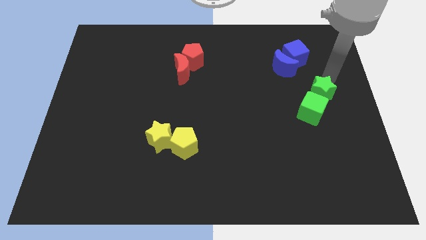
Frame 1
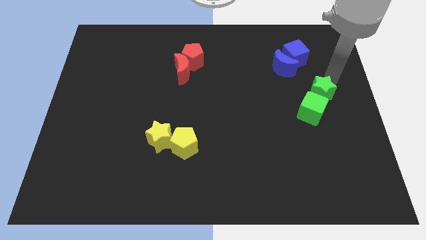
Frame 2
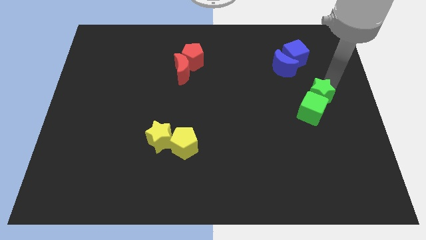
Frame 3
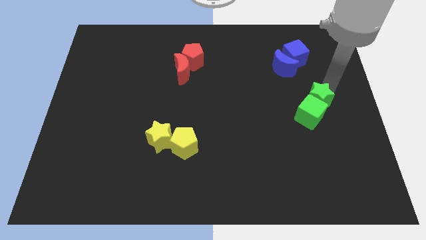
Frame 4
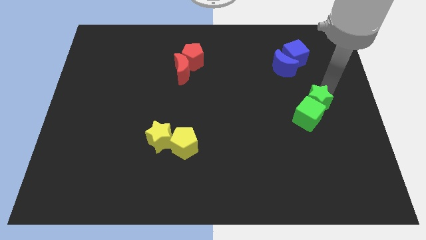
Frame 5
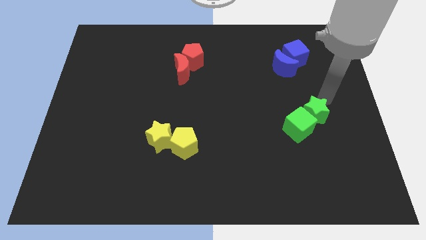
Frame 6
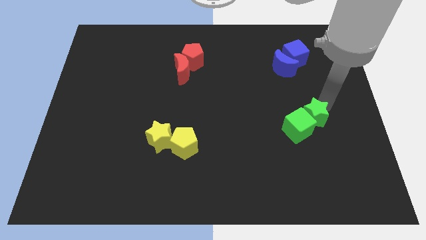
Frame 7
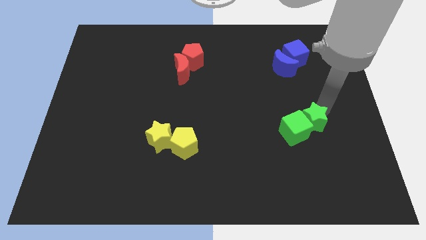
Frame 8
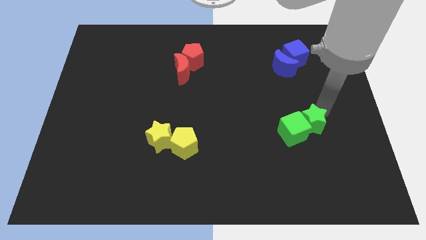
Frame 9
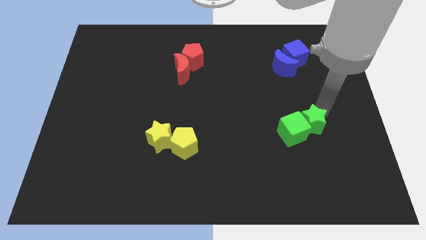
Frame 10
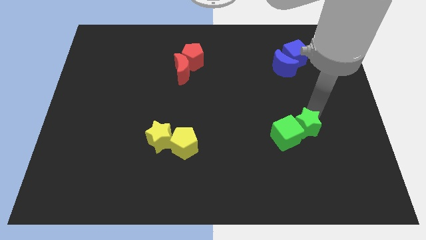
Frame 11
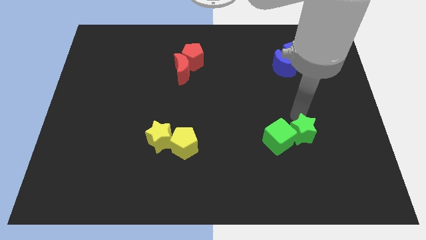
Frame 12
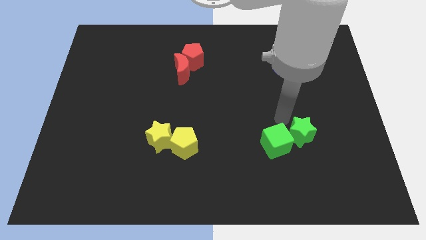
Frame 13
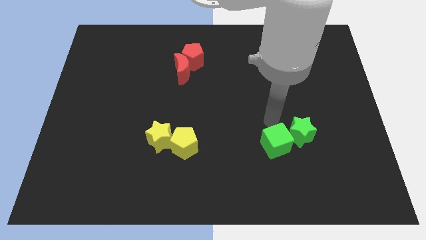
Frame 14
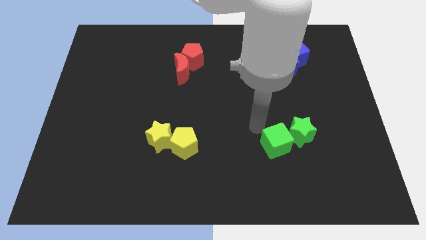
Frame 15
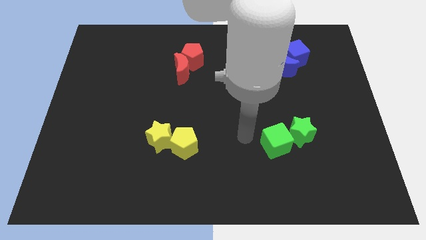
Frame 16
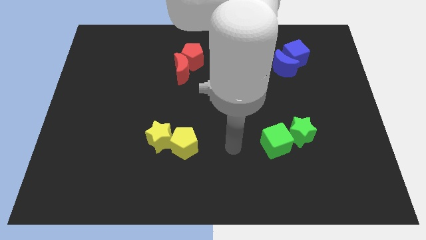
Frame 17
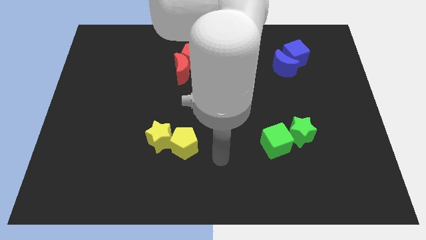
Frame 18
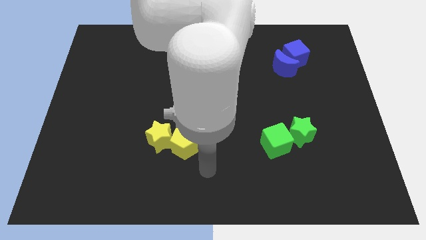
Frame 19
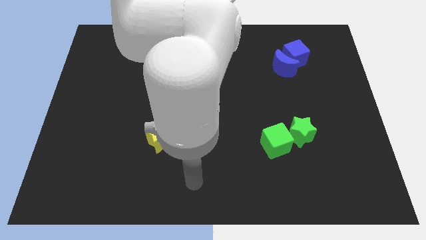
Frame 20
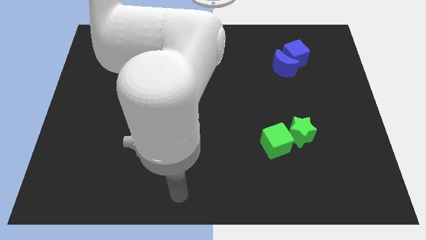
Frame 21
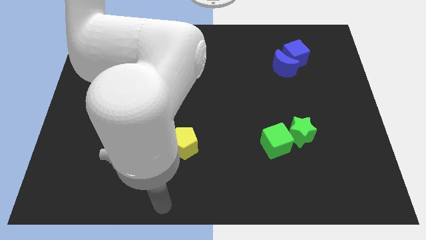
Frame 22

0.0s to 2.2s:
push green star to the center of the board

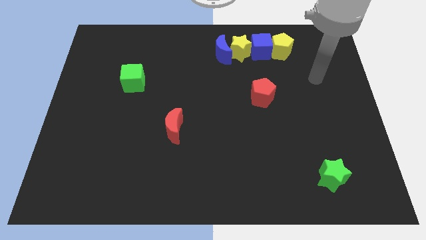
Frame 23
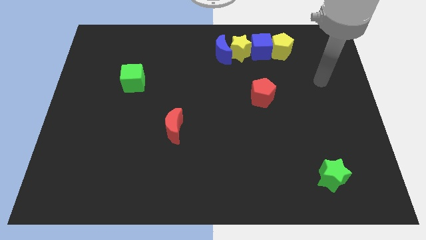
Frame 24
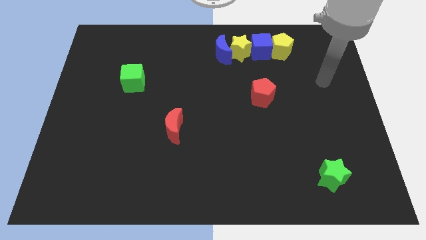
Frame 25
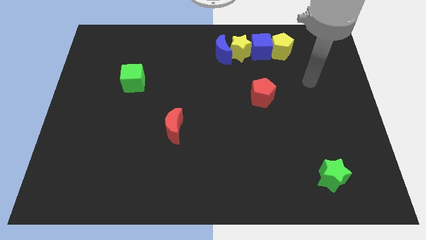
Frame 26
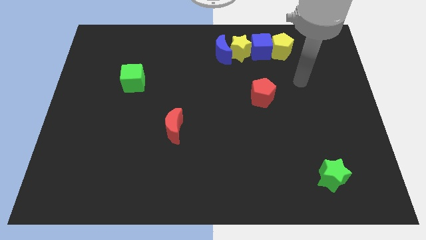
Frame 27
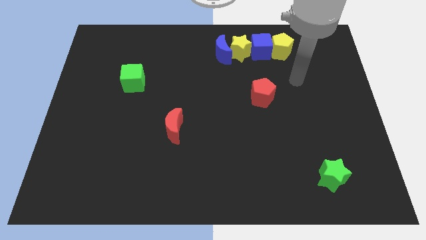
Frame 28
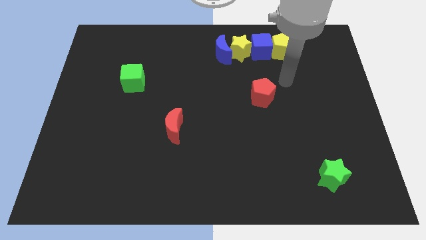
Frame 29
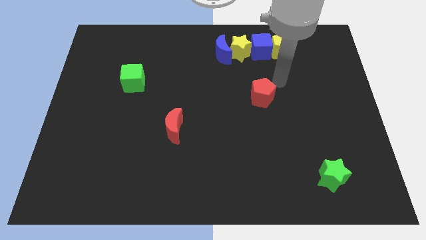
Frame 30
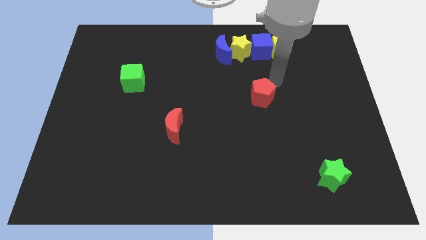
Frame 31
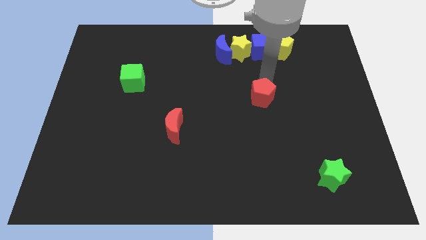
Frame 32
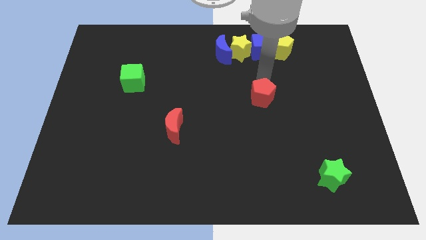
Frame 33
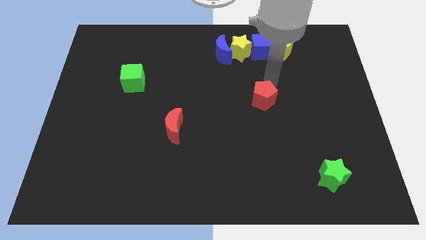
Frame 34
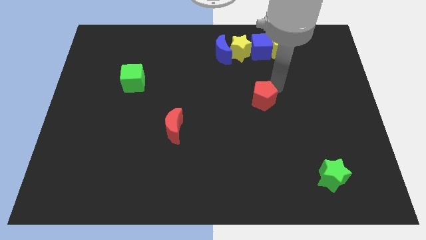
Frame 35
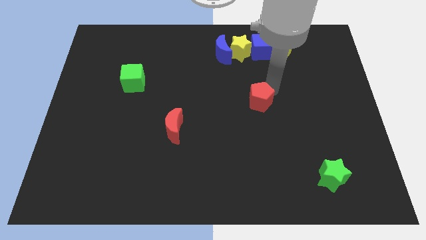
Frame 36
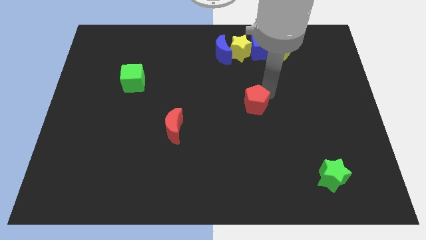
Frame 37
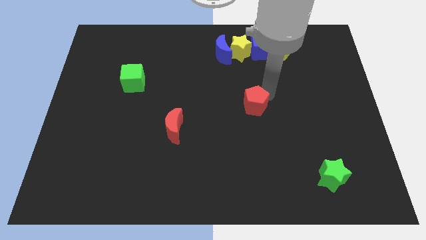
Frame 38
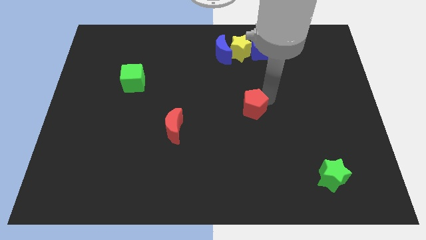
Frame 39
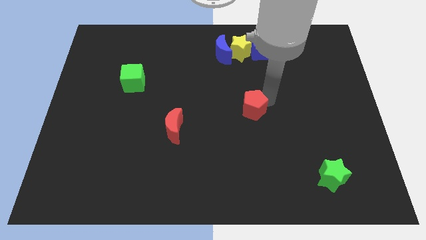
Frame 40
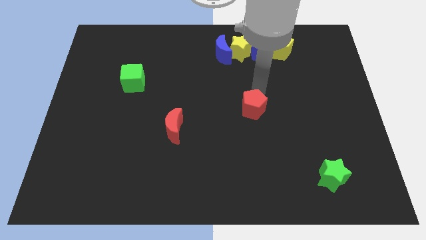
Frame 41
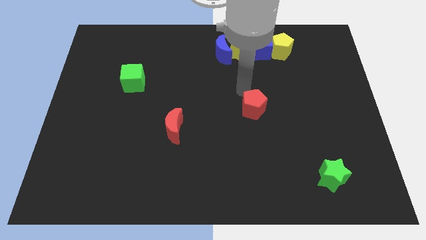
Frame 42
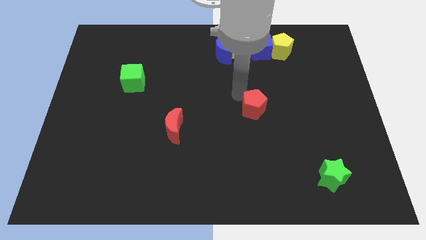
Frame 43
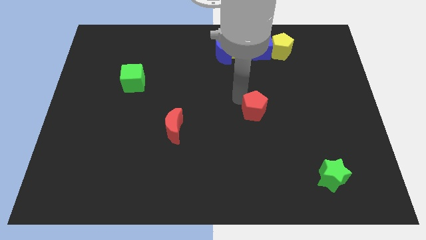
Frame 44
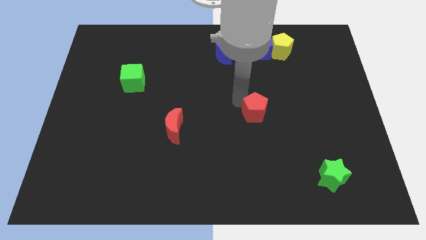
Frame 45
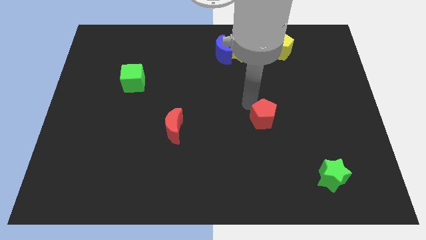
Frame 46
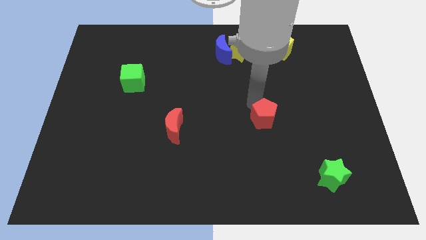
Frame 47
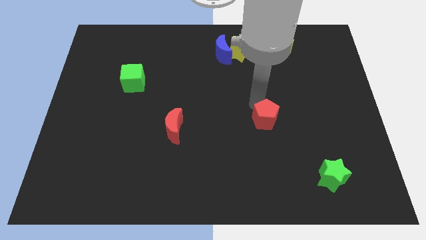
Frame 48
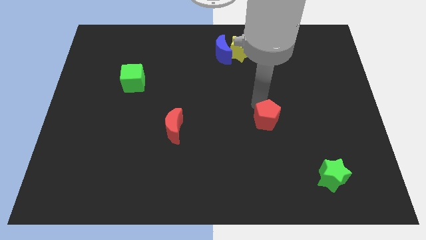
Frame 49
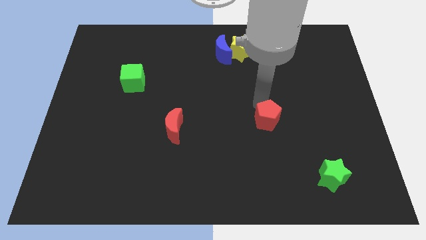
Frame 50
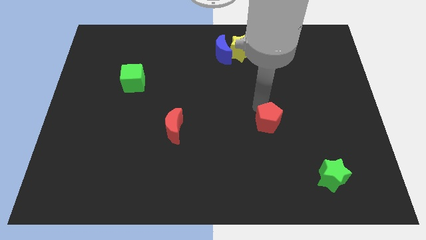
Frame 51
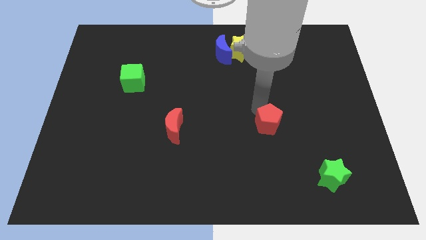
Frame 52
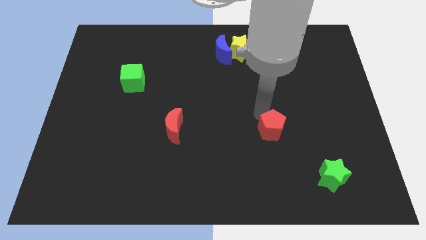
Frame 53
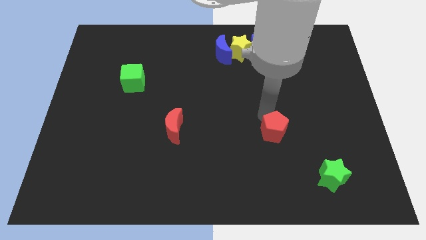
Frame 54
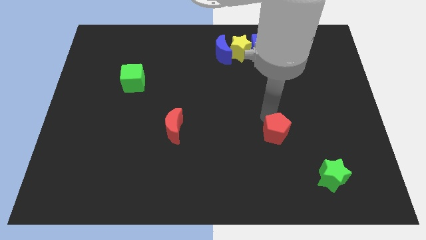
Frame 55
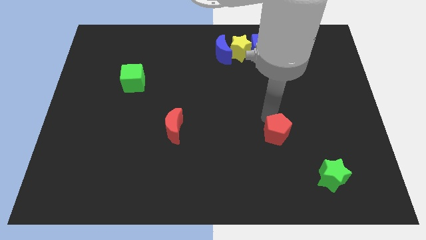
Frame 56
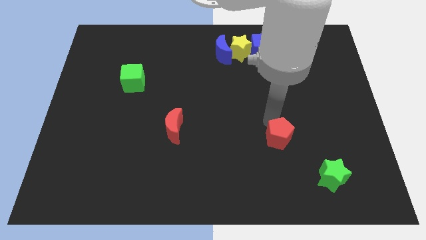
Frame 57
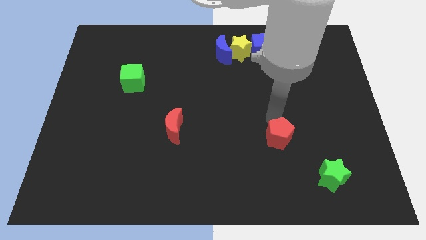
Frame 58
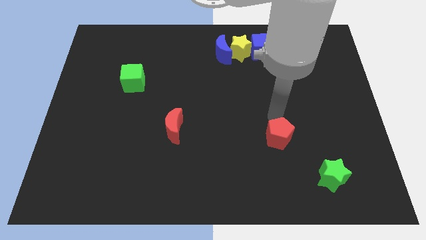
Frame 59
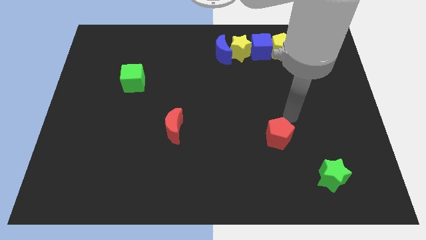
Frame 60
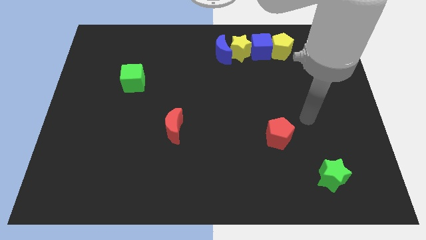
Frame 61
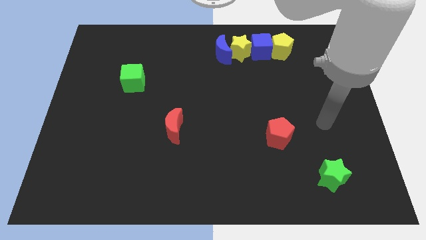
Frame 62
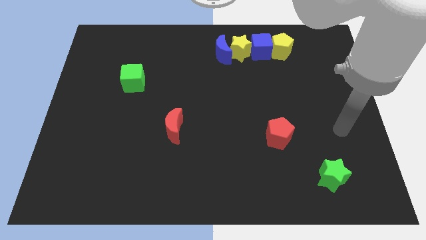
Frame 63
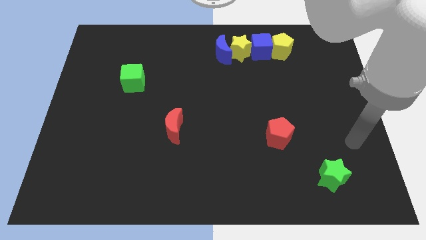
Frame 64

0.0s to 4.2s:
place the red pentagon parallel to right side of the red crescent

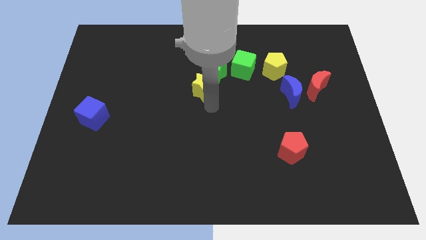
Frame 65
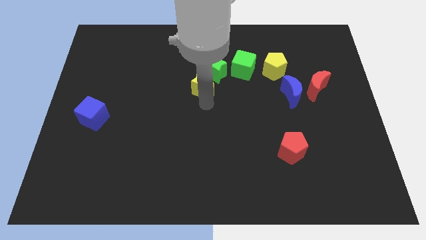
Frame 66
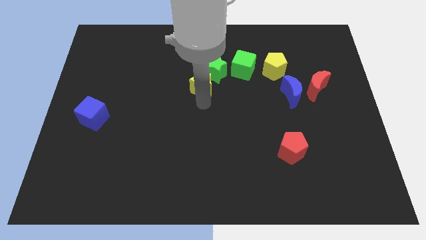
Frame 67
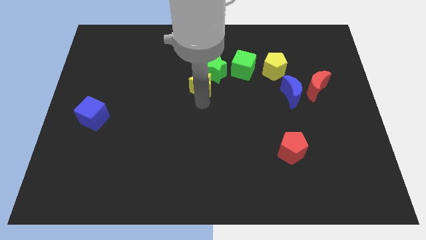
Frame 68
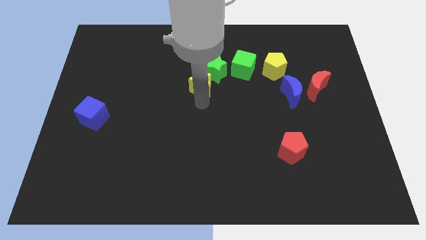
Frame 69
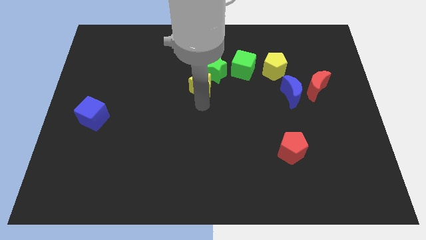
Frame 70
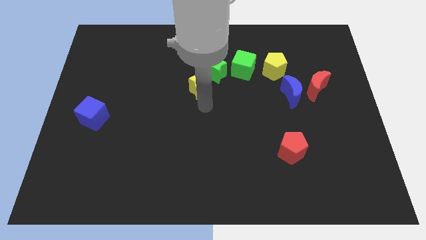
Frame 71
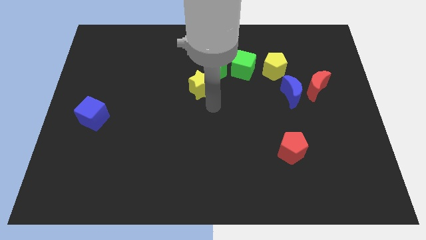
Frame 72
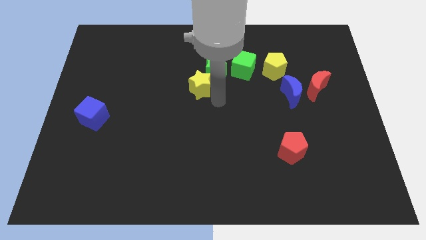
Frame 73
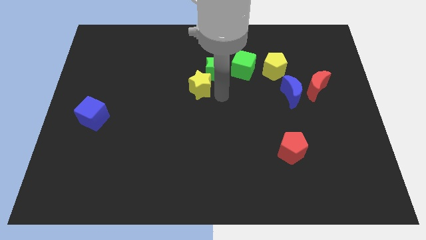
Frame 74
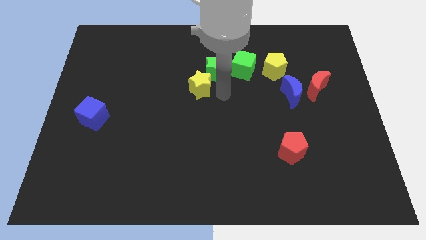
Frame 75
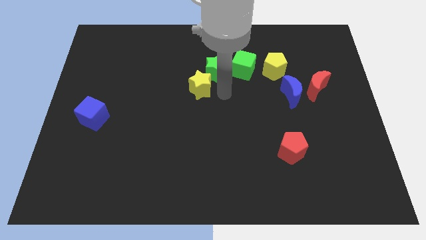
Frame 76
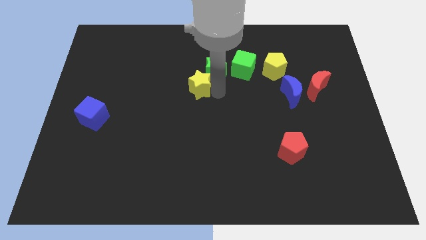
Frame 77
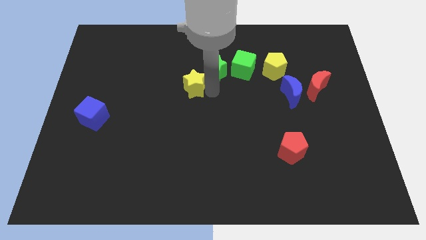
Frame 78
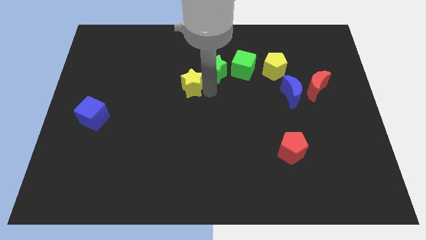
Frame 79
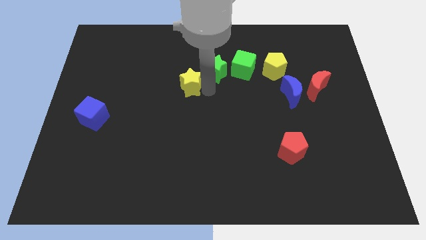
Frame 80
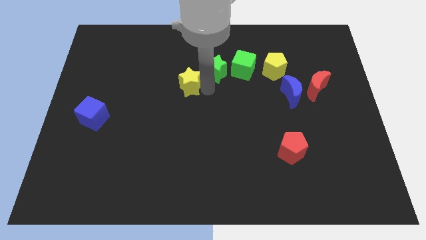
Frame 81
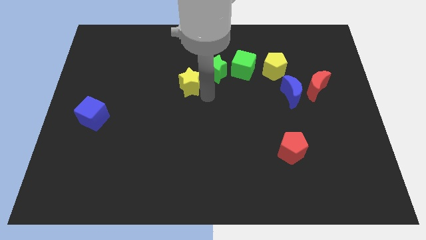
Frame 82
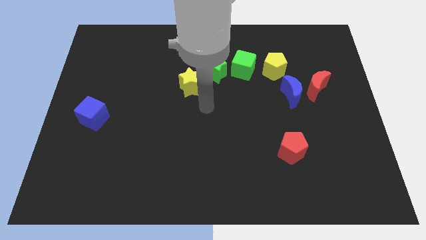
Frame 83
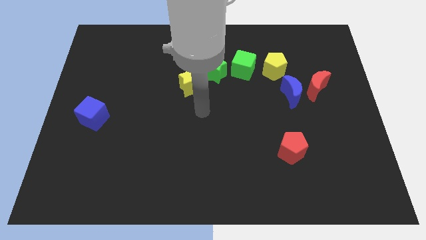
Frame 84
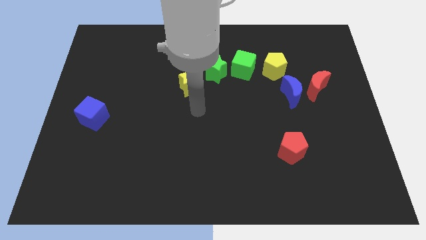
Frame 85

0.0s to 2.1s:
place the yellow star to the bottom left of green star

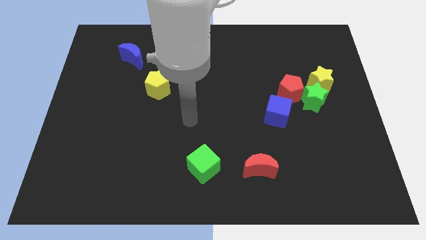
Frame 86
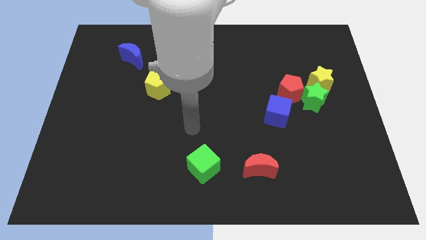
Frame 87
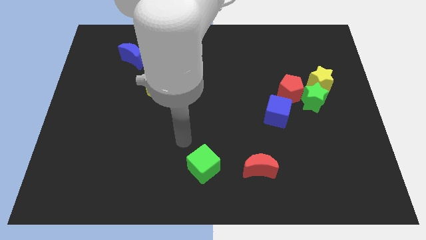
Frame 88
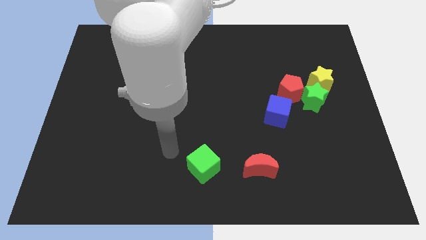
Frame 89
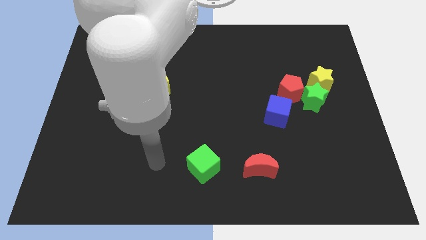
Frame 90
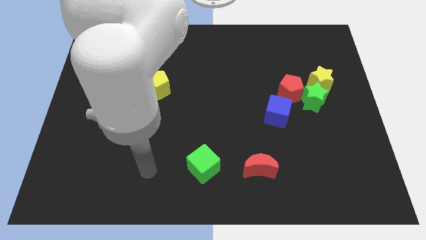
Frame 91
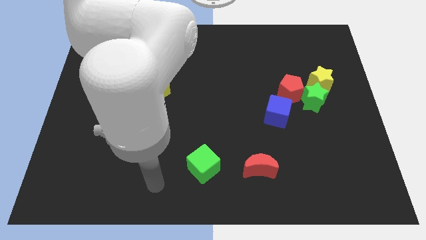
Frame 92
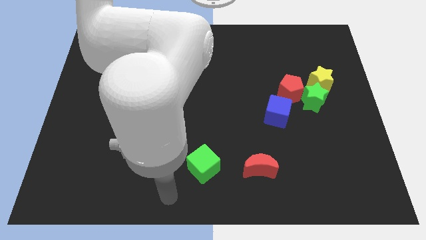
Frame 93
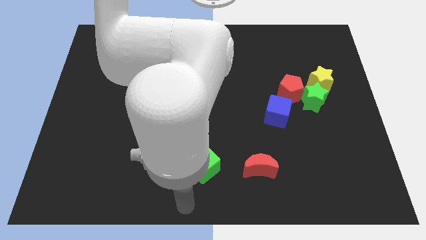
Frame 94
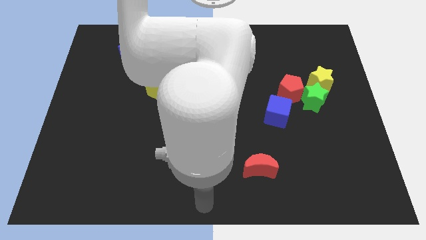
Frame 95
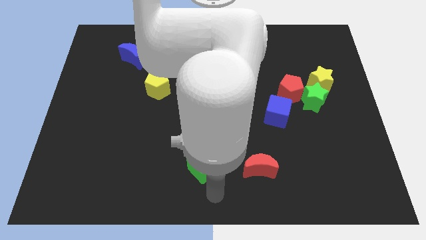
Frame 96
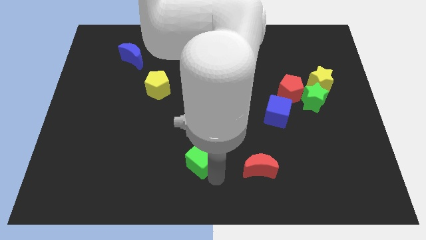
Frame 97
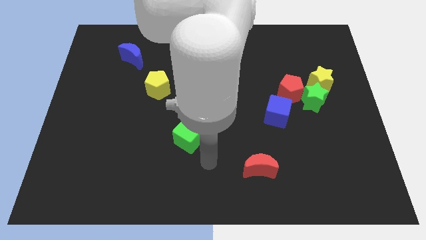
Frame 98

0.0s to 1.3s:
move arm towards the green square in bottom center of the board
